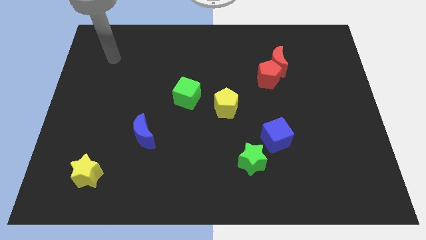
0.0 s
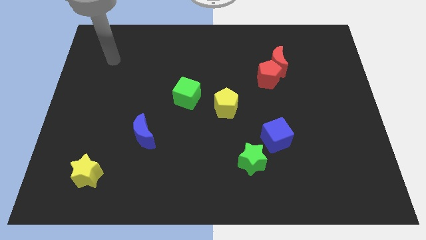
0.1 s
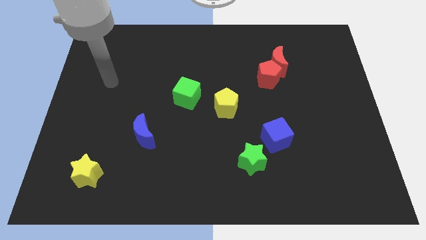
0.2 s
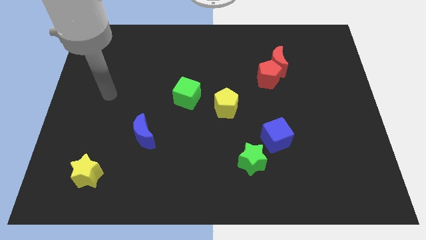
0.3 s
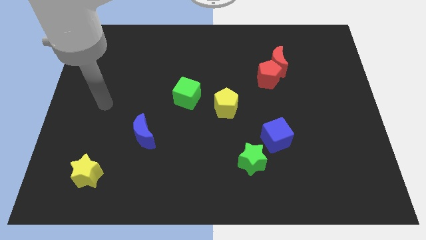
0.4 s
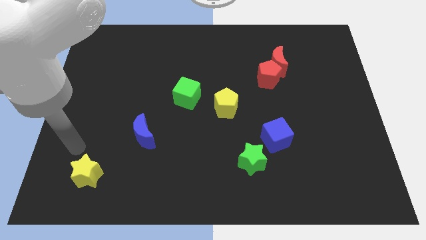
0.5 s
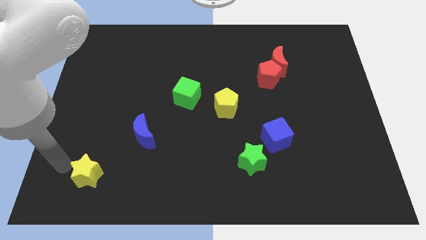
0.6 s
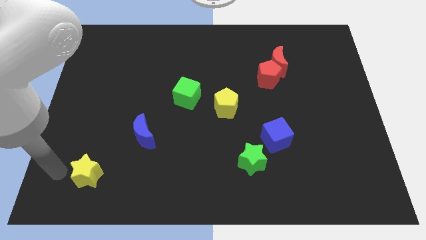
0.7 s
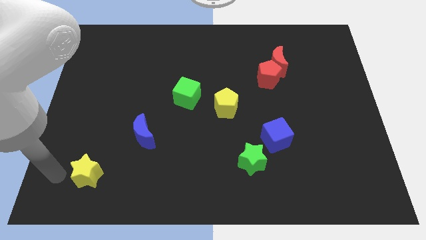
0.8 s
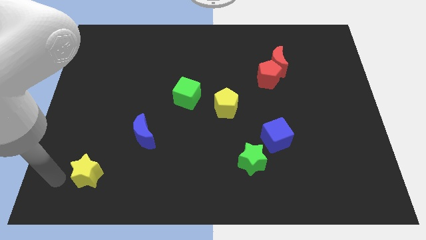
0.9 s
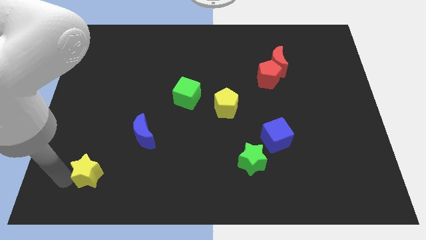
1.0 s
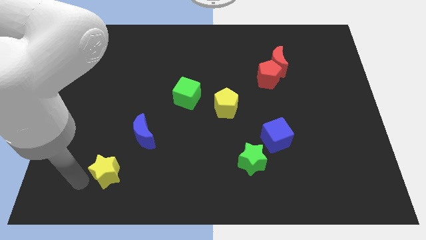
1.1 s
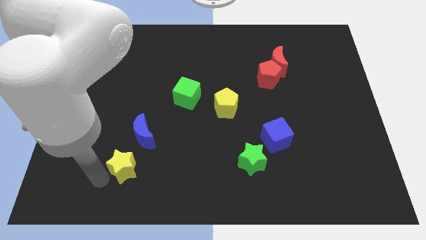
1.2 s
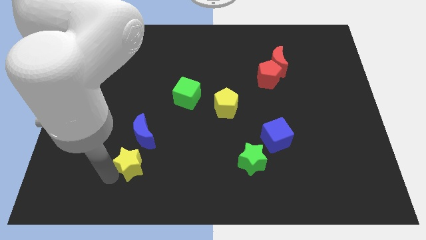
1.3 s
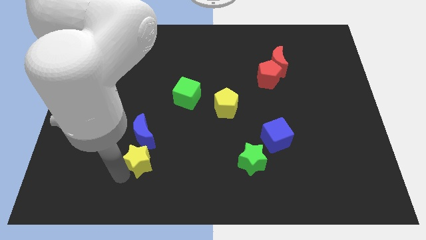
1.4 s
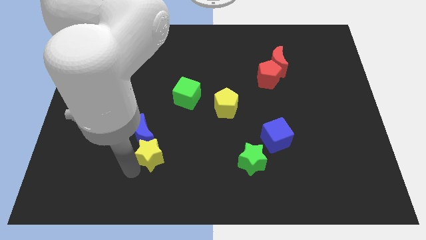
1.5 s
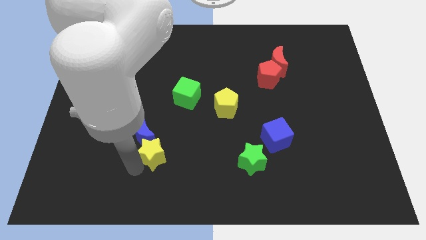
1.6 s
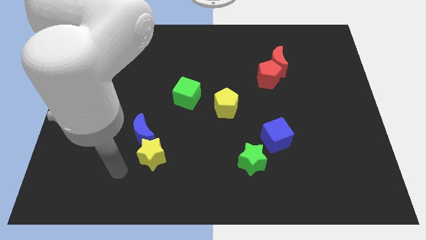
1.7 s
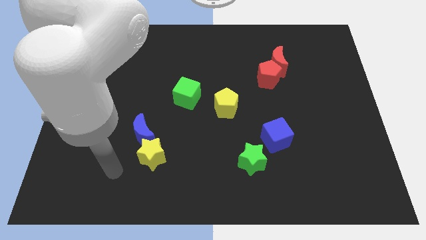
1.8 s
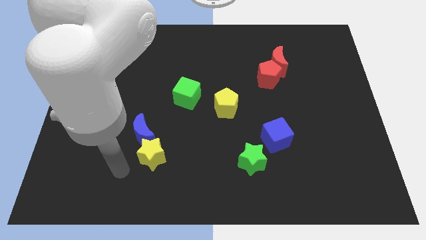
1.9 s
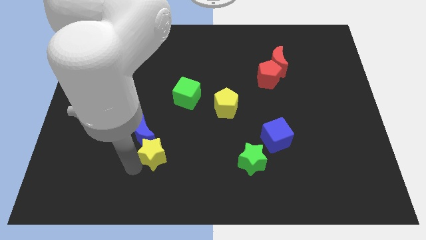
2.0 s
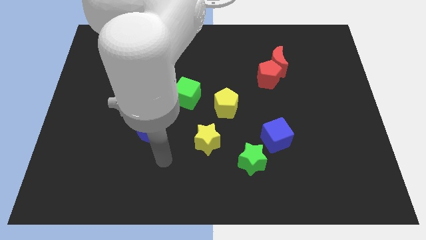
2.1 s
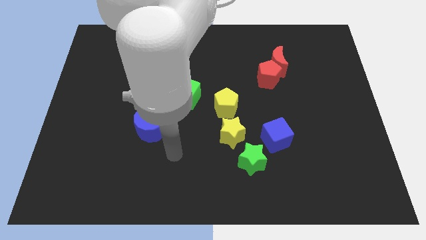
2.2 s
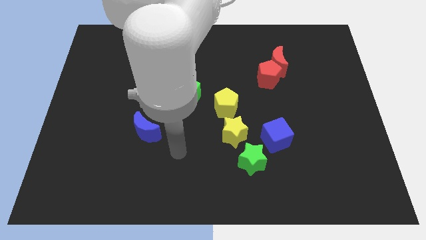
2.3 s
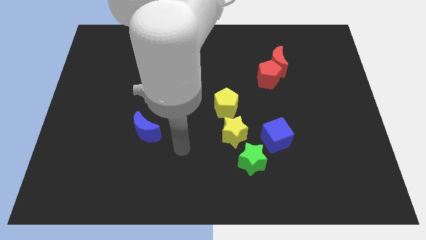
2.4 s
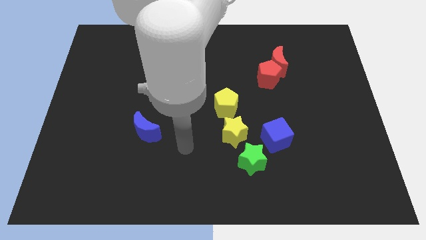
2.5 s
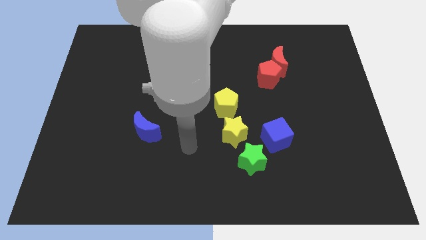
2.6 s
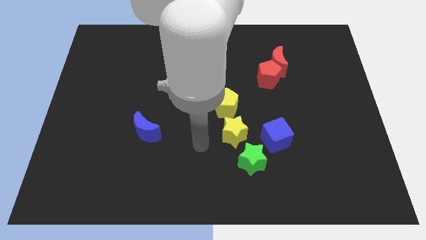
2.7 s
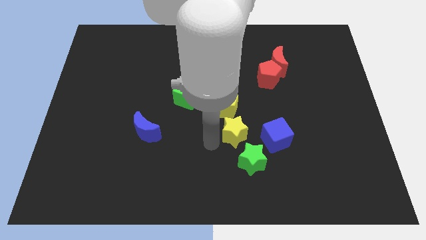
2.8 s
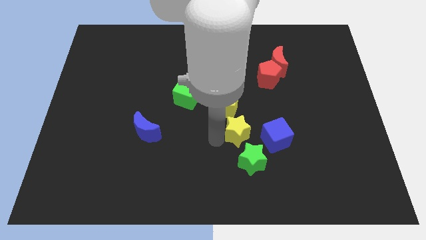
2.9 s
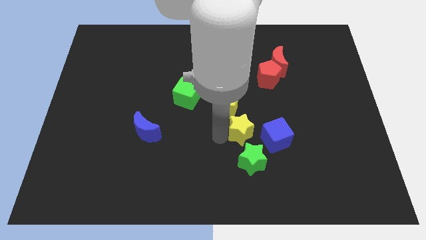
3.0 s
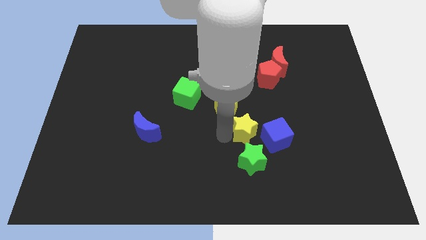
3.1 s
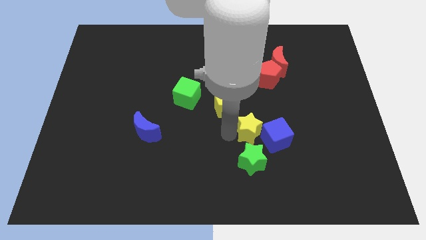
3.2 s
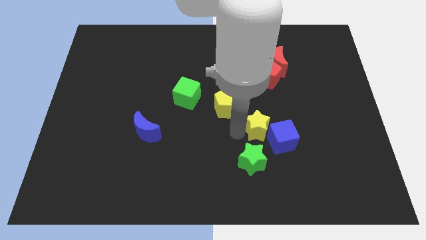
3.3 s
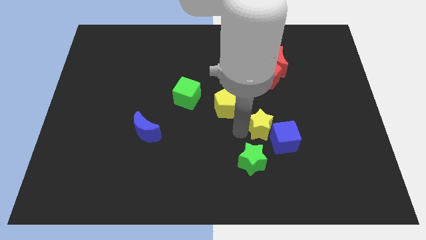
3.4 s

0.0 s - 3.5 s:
move the yellow star towards the blue cube

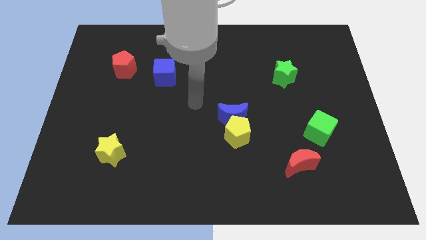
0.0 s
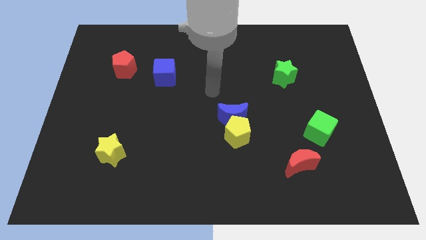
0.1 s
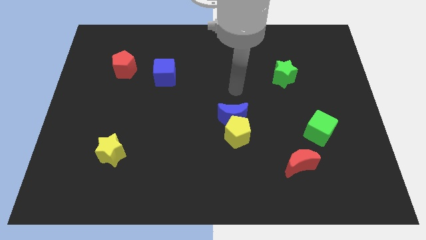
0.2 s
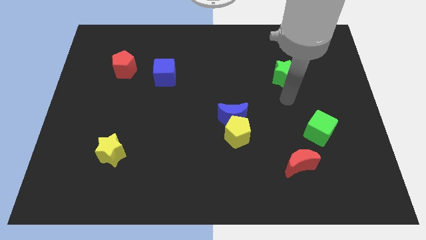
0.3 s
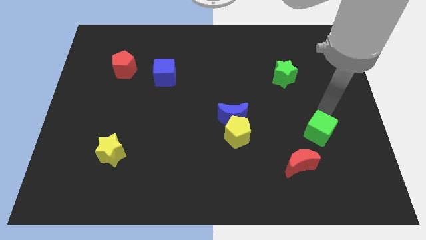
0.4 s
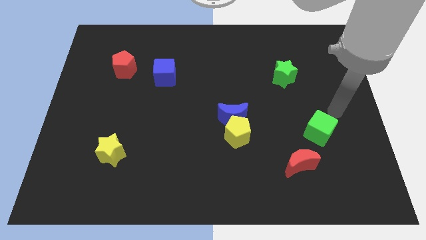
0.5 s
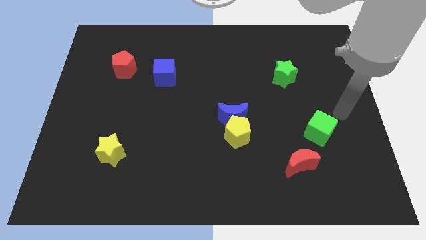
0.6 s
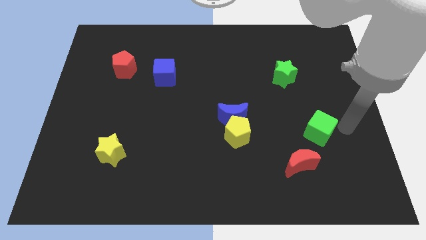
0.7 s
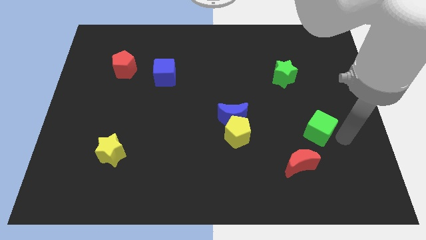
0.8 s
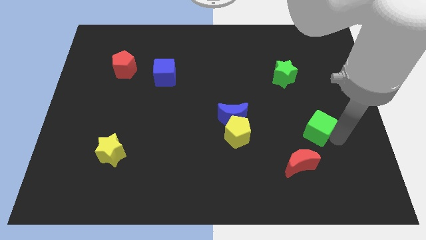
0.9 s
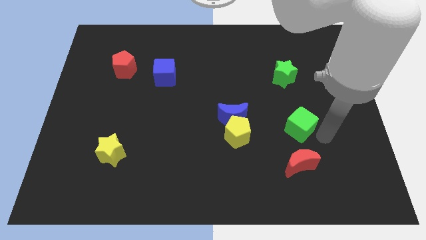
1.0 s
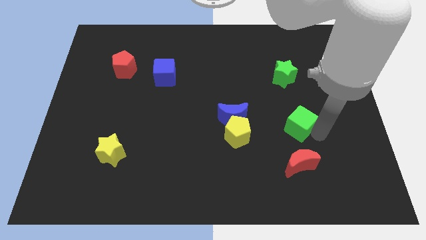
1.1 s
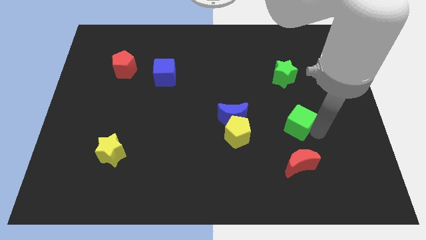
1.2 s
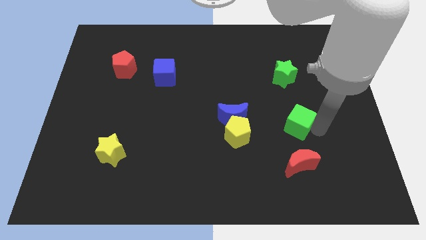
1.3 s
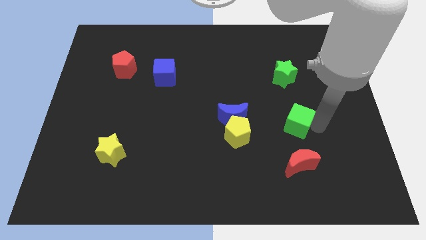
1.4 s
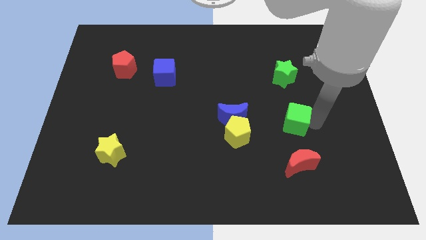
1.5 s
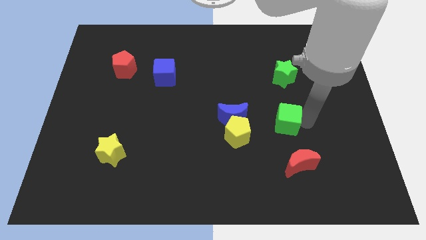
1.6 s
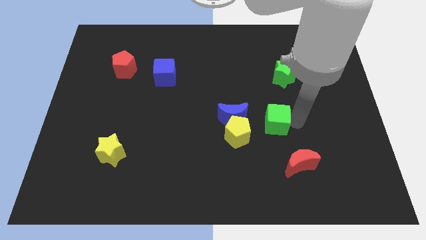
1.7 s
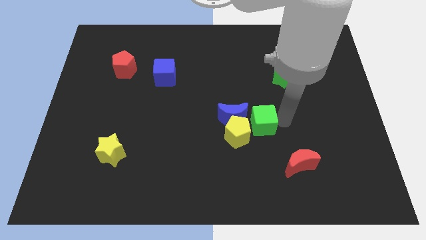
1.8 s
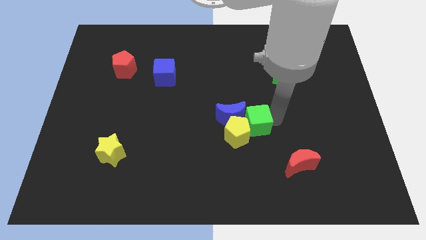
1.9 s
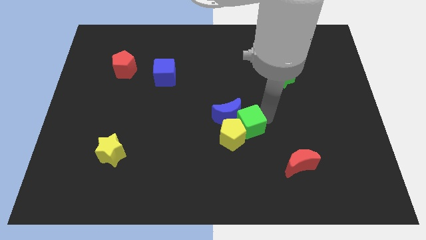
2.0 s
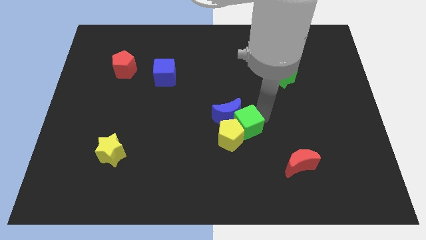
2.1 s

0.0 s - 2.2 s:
slide the green cube towards the yellow pentagon

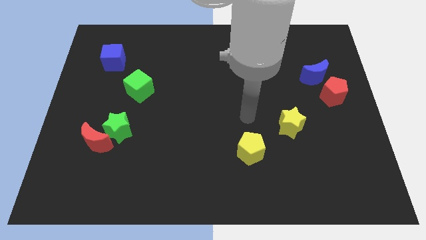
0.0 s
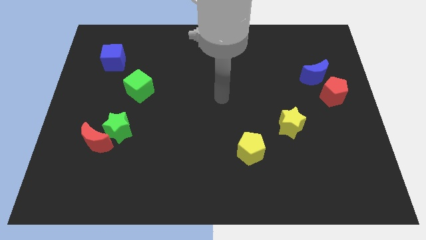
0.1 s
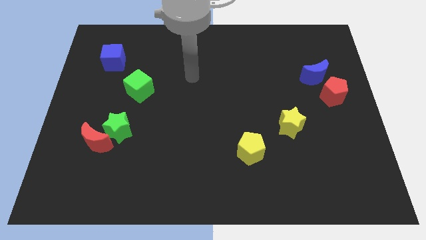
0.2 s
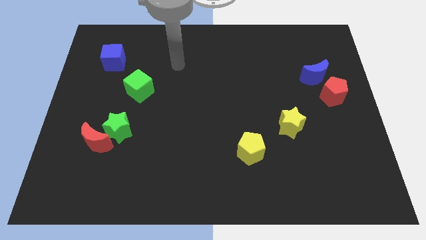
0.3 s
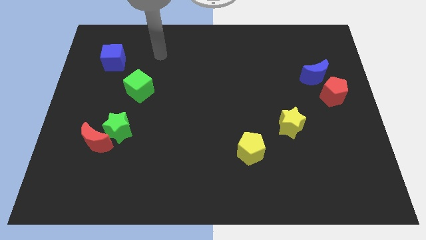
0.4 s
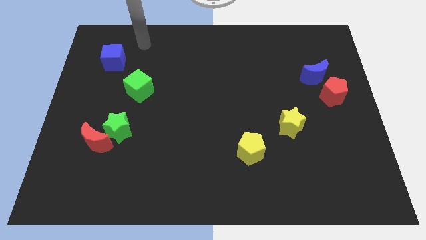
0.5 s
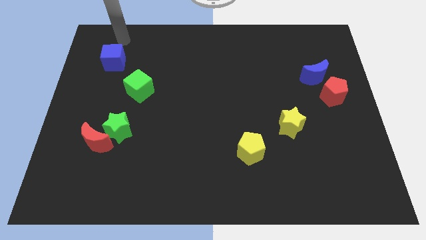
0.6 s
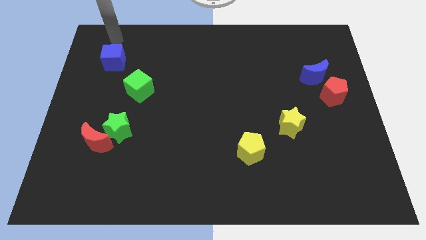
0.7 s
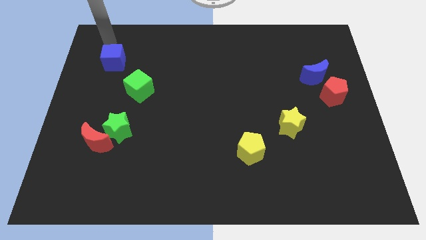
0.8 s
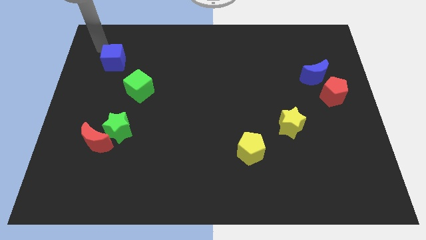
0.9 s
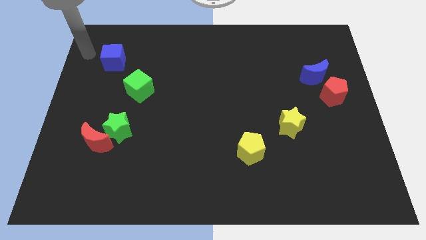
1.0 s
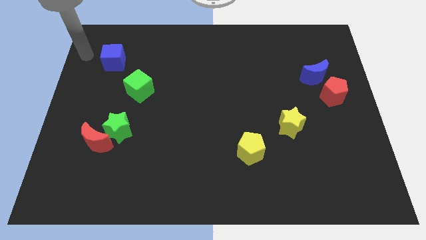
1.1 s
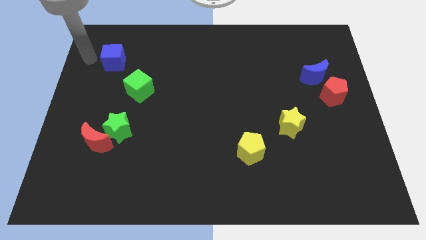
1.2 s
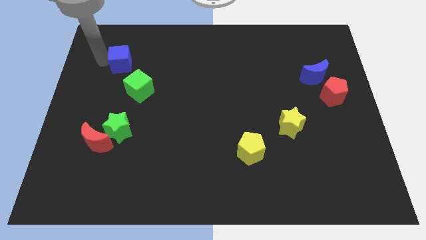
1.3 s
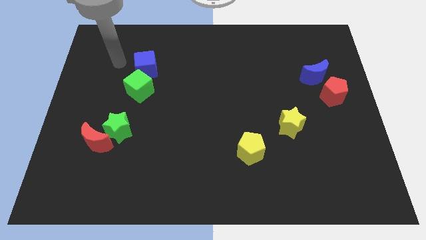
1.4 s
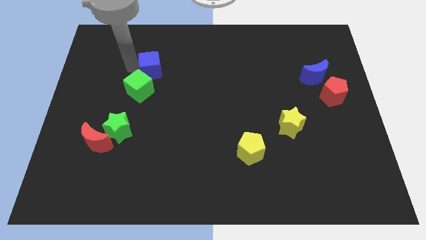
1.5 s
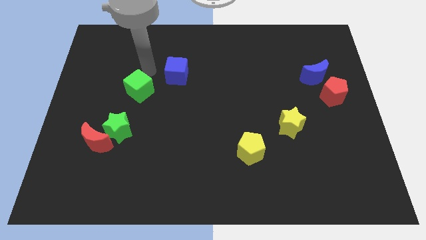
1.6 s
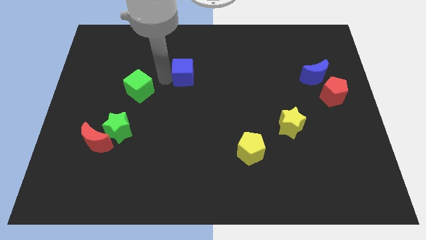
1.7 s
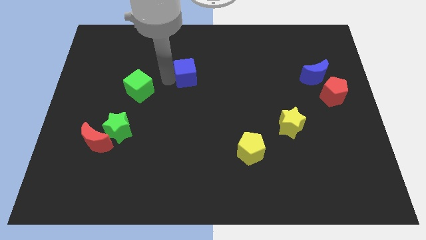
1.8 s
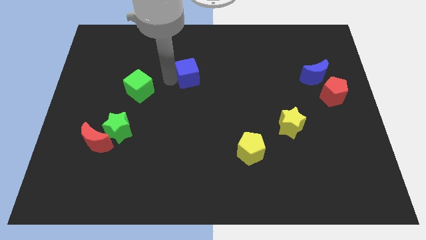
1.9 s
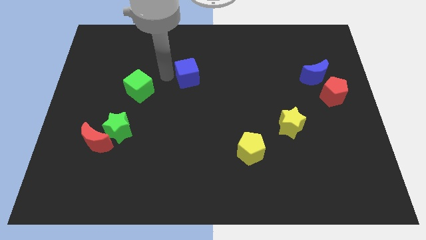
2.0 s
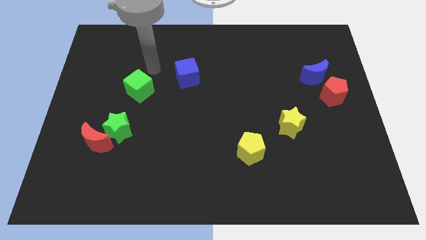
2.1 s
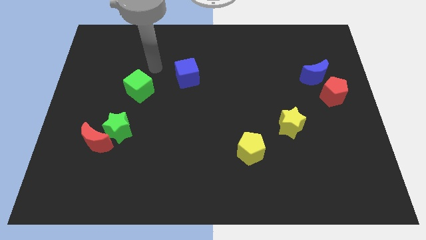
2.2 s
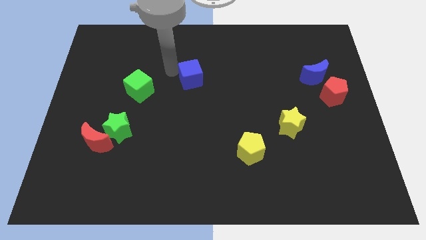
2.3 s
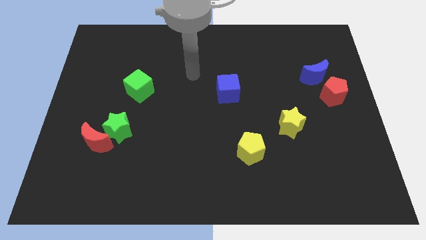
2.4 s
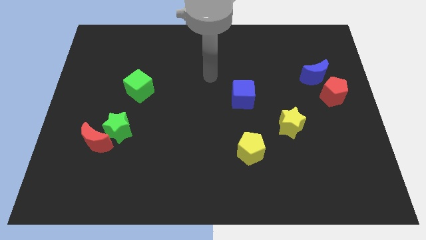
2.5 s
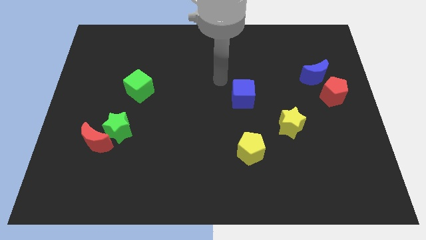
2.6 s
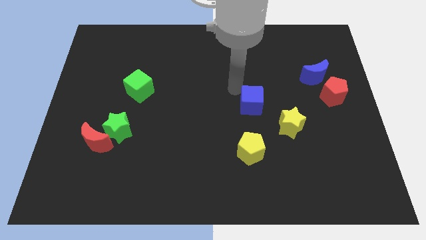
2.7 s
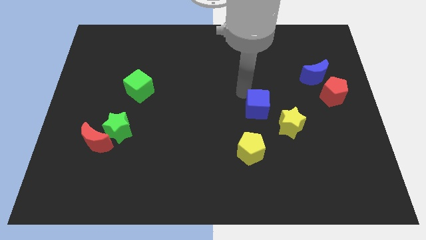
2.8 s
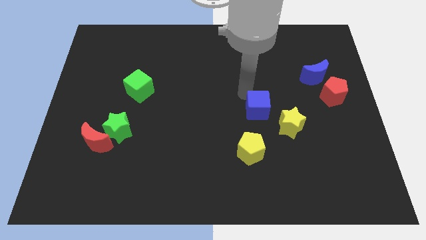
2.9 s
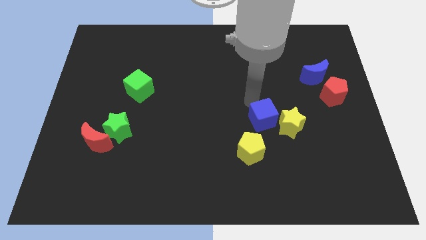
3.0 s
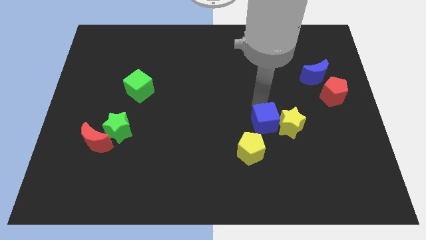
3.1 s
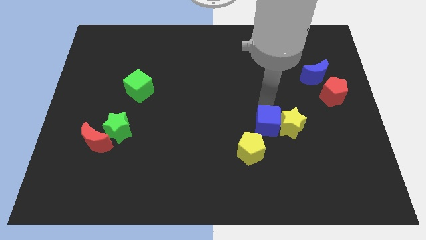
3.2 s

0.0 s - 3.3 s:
move the blue cube to the yellow star
